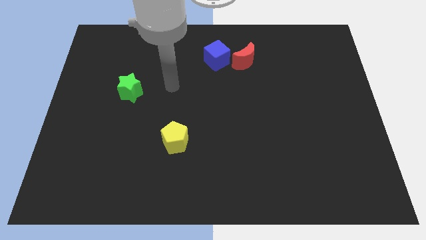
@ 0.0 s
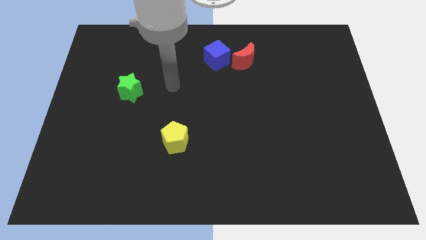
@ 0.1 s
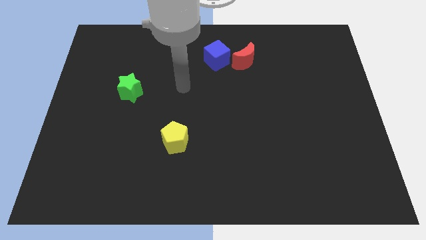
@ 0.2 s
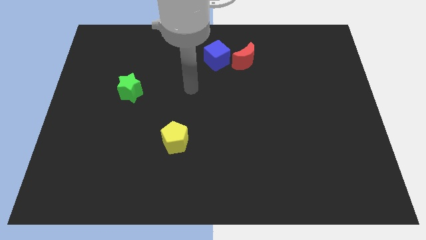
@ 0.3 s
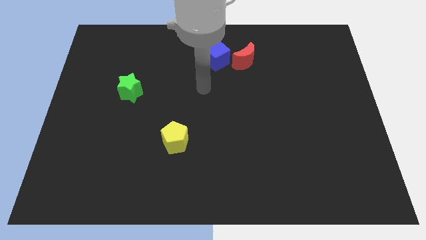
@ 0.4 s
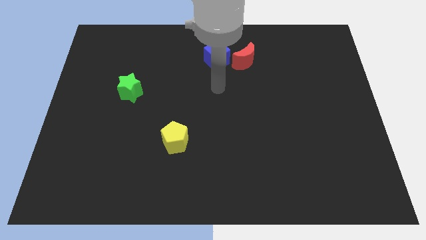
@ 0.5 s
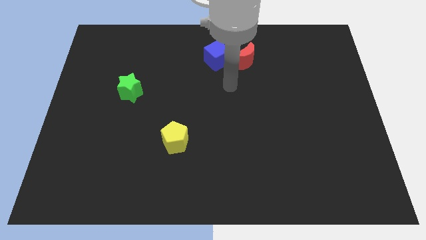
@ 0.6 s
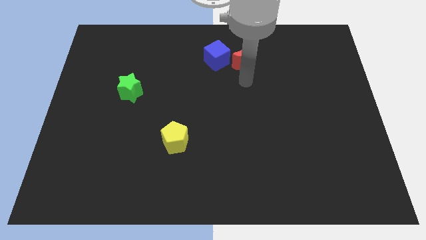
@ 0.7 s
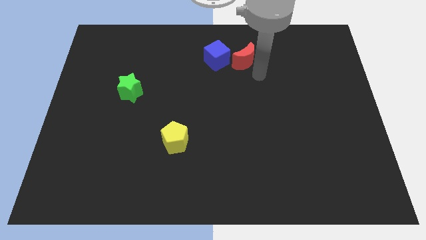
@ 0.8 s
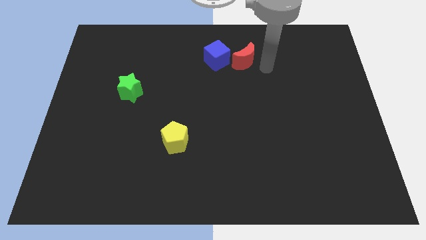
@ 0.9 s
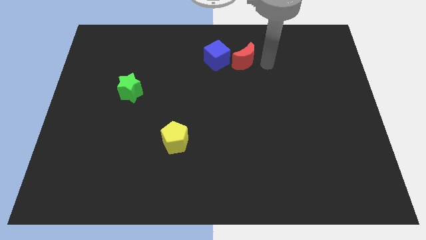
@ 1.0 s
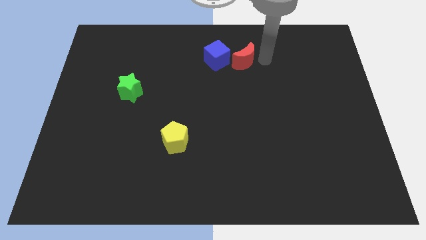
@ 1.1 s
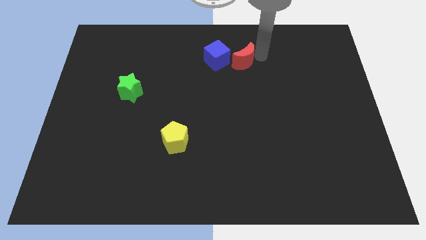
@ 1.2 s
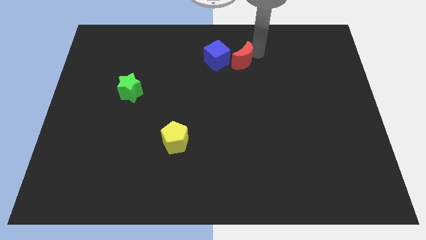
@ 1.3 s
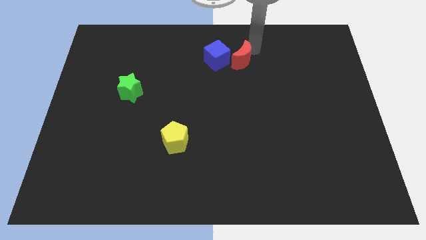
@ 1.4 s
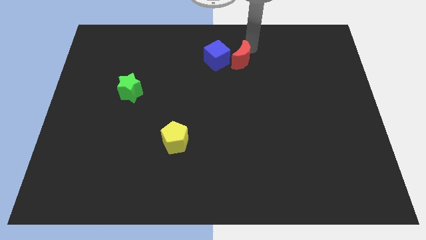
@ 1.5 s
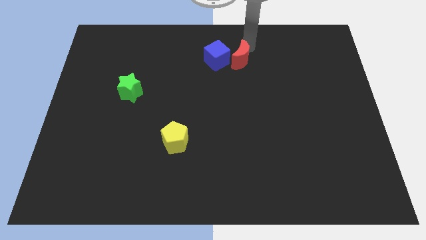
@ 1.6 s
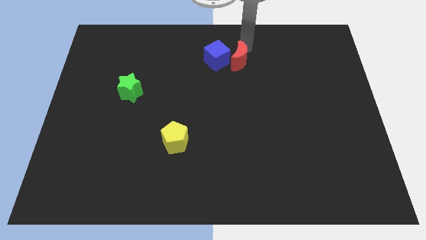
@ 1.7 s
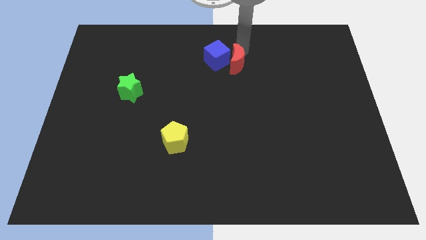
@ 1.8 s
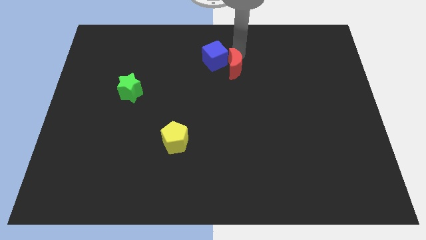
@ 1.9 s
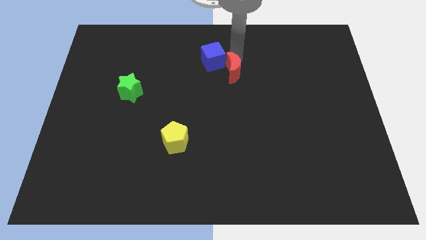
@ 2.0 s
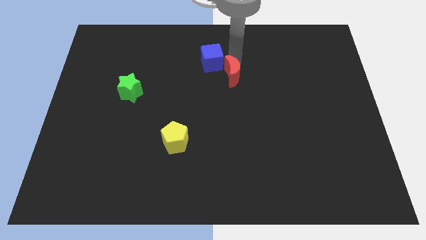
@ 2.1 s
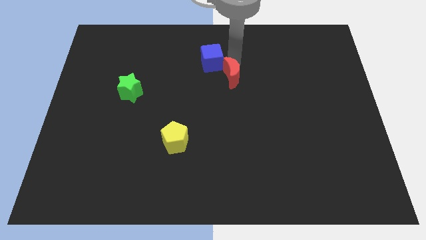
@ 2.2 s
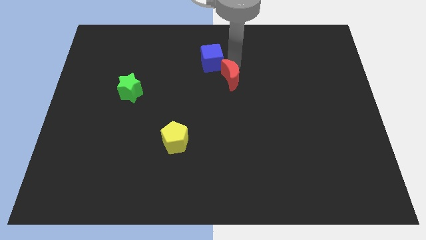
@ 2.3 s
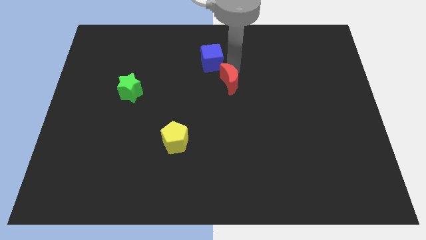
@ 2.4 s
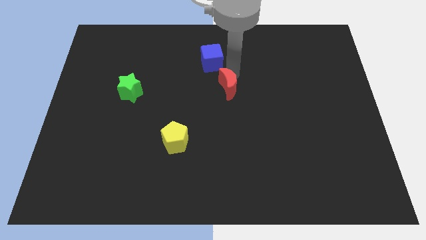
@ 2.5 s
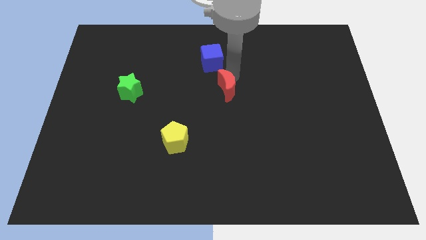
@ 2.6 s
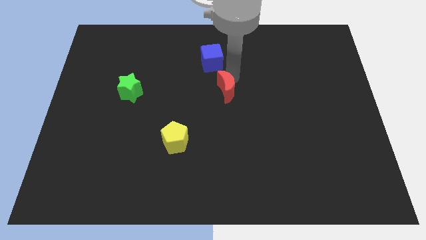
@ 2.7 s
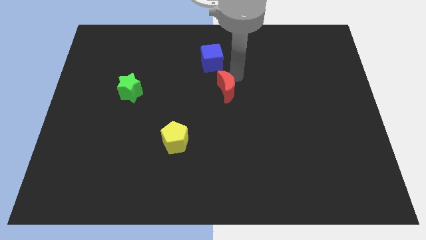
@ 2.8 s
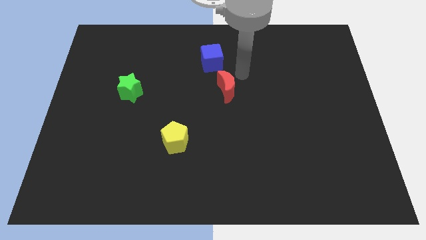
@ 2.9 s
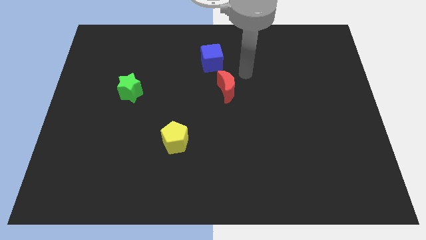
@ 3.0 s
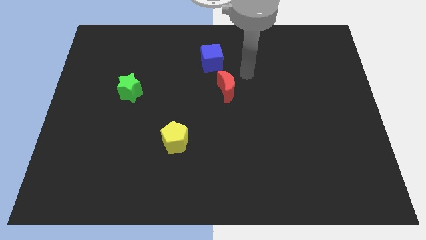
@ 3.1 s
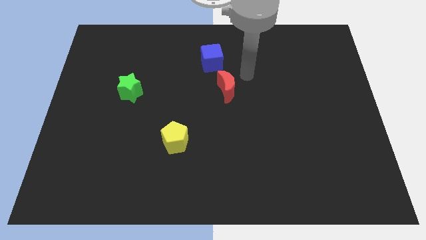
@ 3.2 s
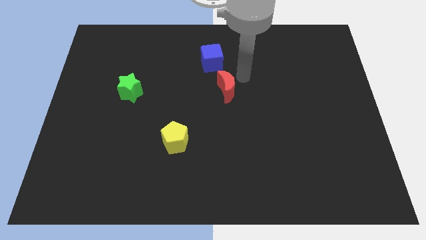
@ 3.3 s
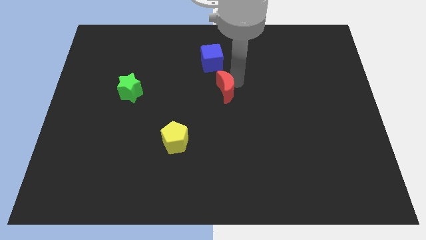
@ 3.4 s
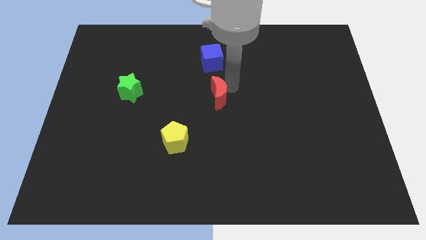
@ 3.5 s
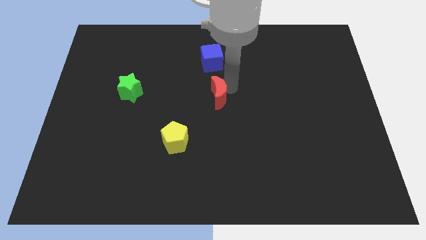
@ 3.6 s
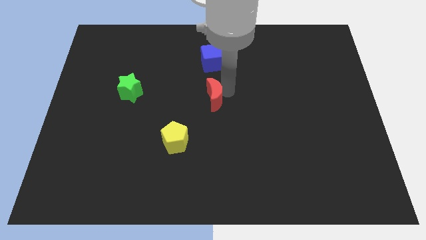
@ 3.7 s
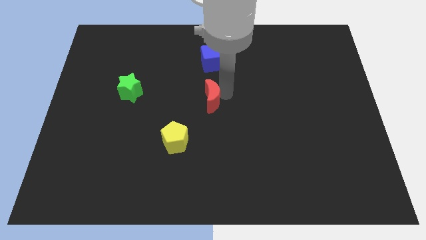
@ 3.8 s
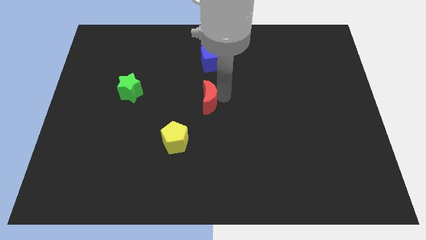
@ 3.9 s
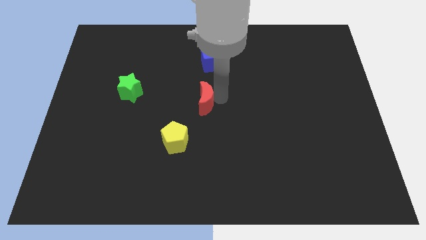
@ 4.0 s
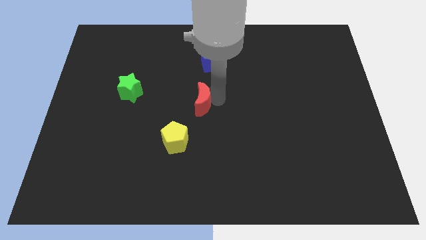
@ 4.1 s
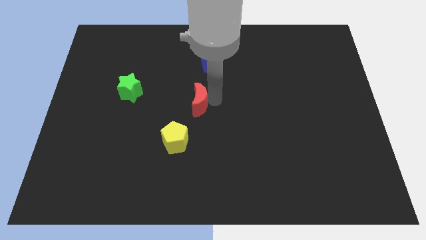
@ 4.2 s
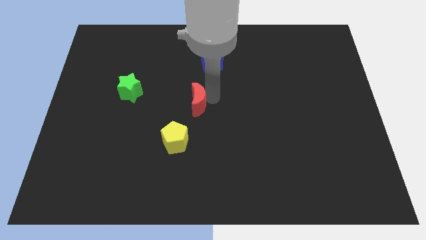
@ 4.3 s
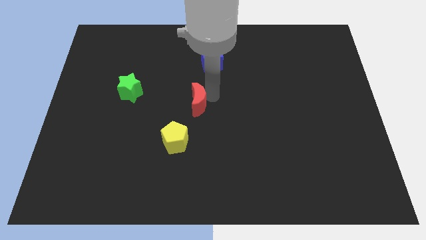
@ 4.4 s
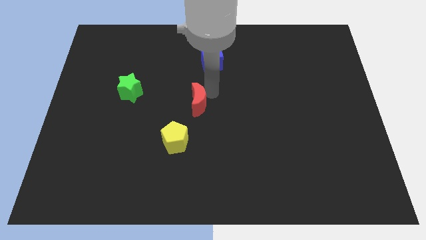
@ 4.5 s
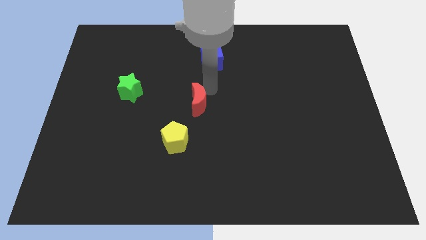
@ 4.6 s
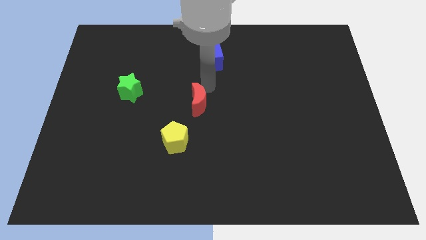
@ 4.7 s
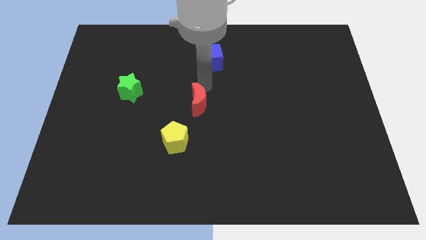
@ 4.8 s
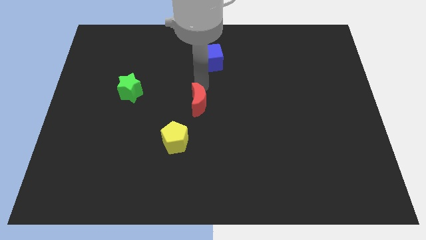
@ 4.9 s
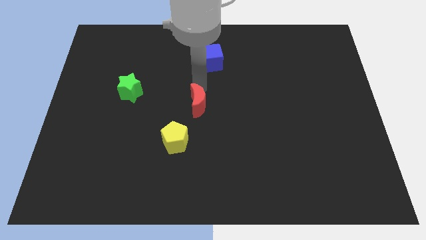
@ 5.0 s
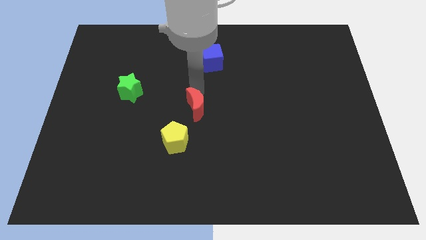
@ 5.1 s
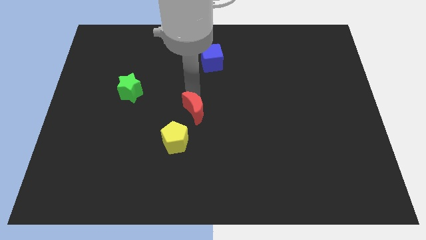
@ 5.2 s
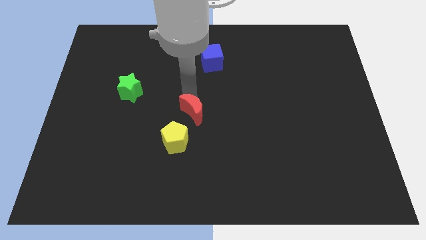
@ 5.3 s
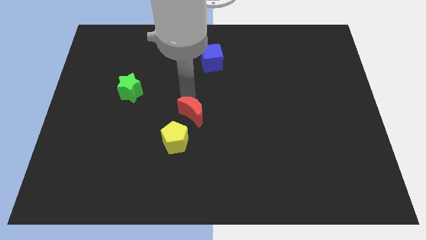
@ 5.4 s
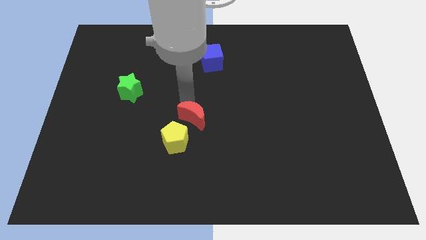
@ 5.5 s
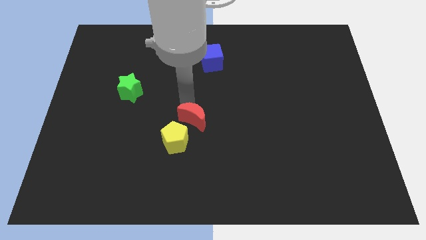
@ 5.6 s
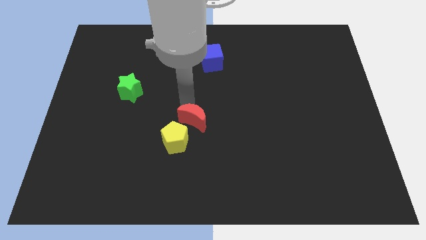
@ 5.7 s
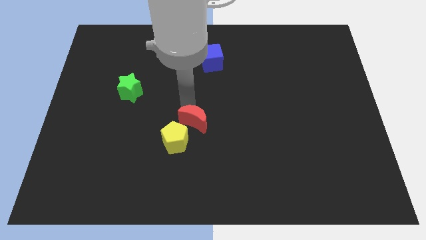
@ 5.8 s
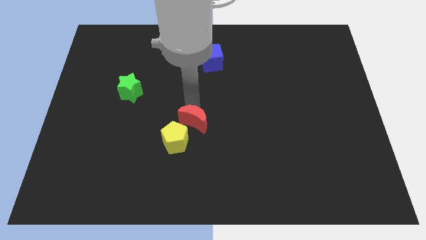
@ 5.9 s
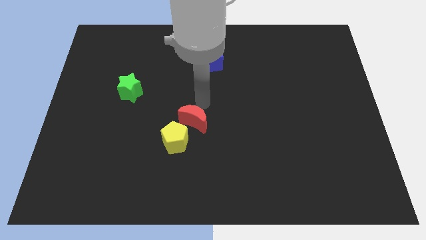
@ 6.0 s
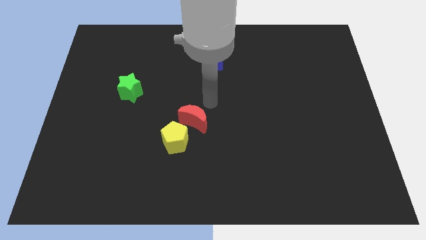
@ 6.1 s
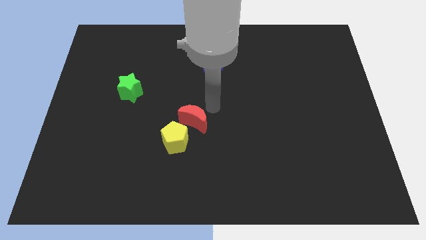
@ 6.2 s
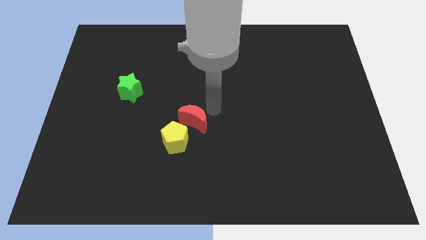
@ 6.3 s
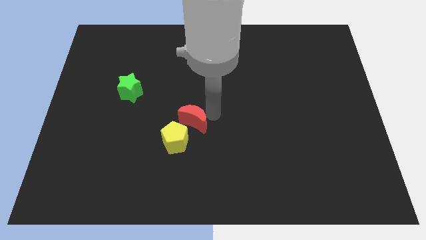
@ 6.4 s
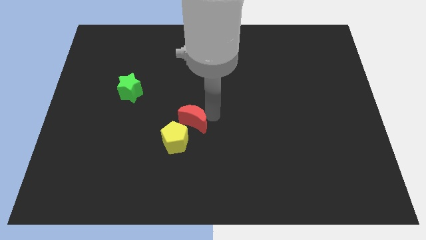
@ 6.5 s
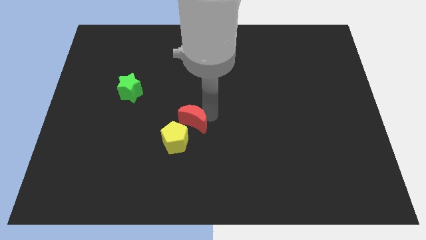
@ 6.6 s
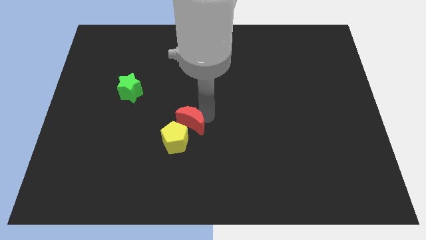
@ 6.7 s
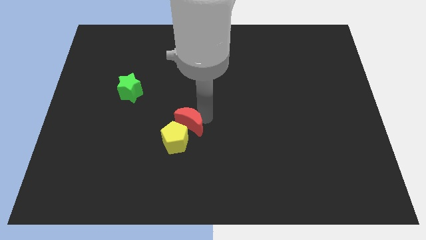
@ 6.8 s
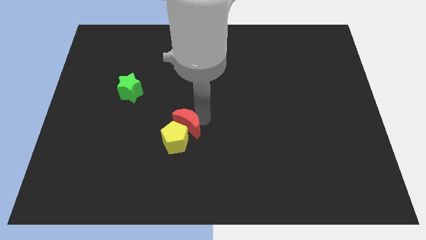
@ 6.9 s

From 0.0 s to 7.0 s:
push the red block towards the yellow block

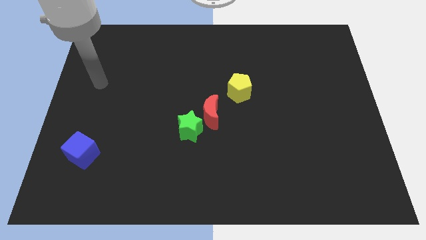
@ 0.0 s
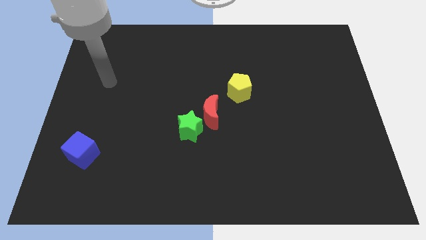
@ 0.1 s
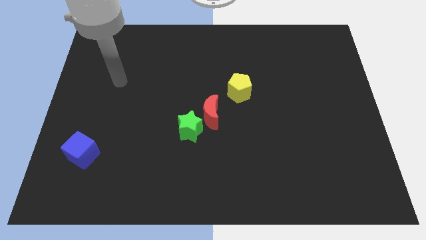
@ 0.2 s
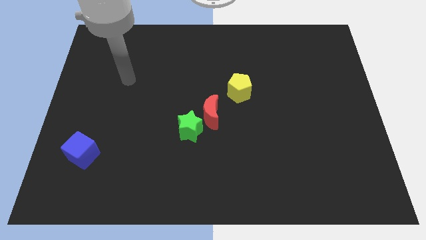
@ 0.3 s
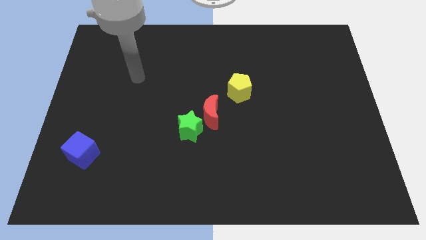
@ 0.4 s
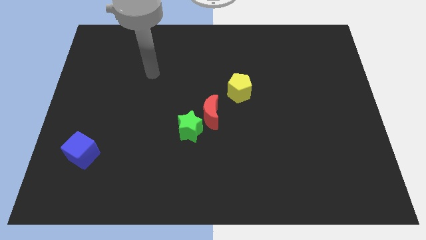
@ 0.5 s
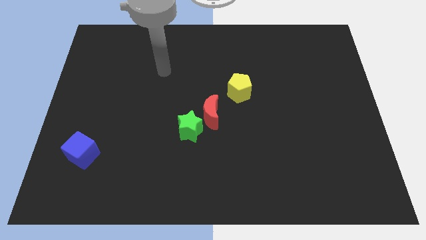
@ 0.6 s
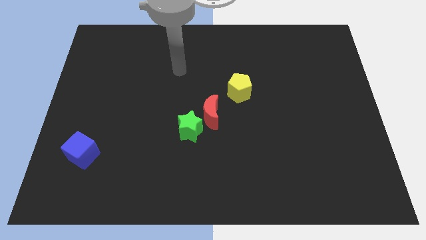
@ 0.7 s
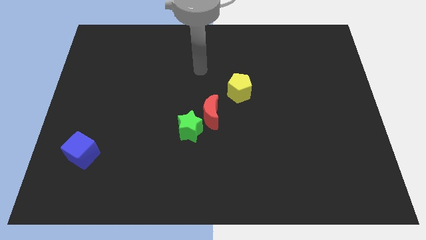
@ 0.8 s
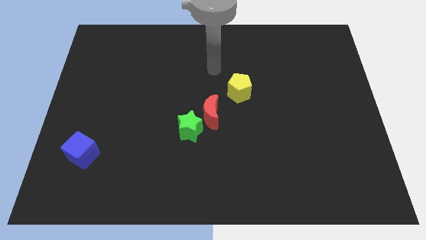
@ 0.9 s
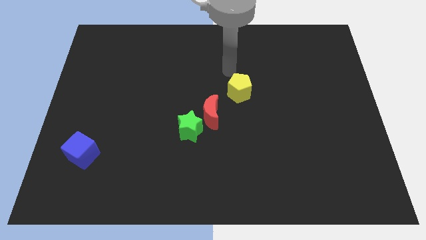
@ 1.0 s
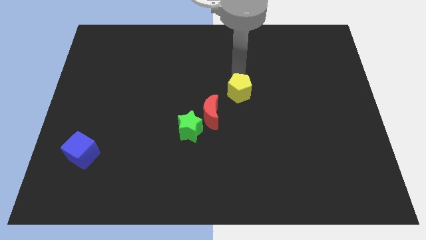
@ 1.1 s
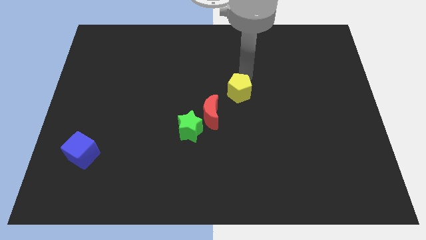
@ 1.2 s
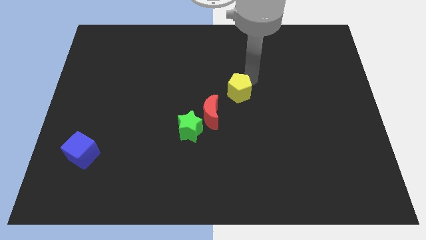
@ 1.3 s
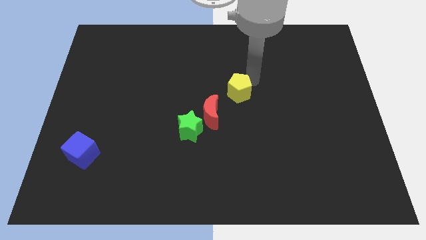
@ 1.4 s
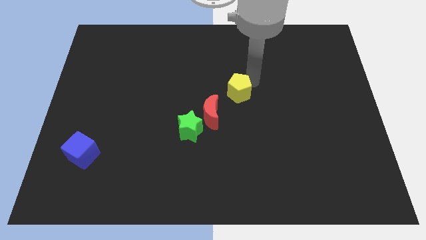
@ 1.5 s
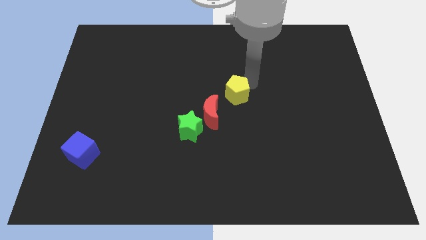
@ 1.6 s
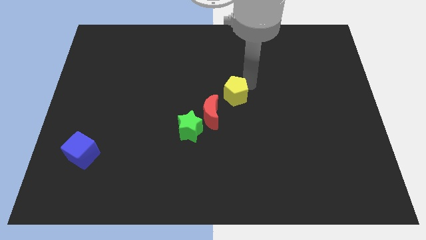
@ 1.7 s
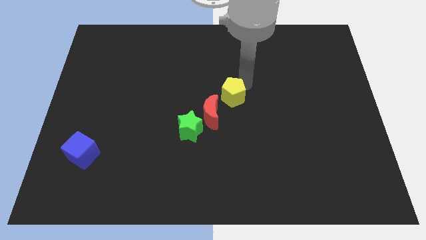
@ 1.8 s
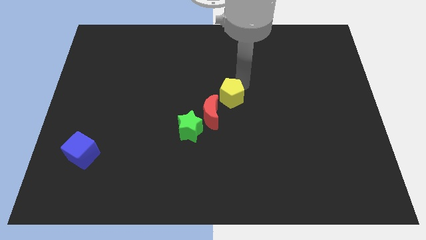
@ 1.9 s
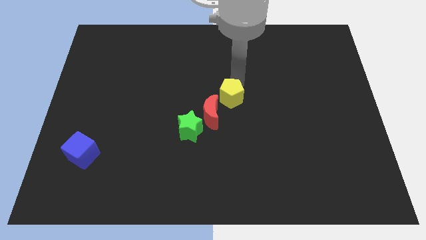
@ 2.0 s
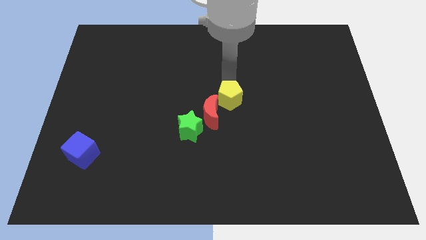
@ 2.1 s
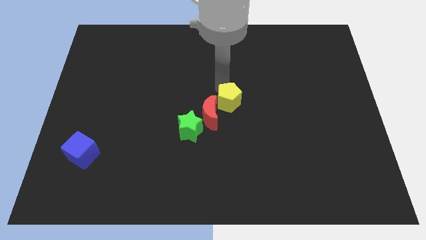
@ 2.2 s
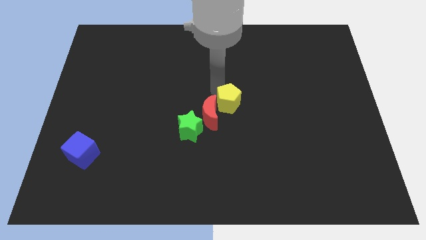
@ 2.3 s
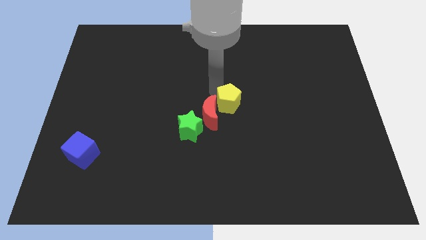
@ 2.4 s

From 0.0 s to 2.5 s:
slide the pentagon towards the moon
